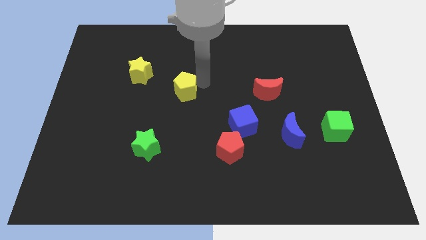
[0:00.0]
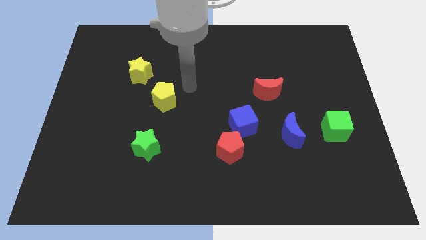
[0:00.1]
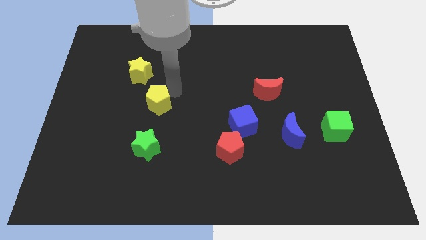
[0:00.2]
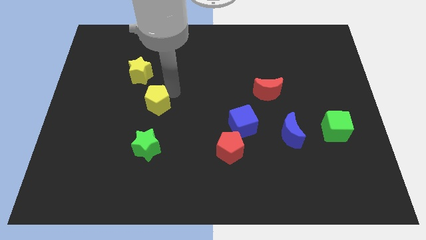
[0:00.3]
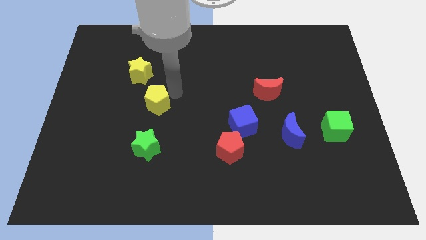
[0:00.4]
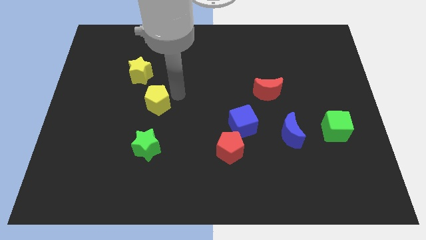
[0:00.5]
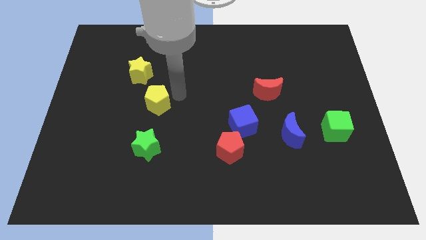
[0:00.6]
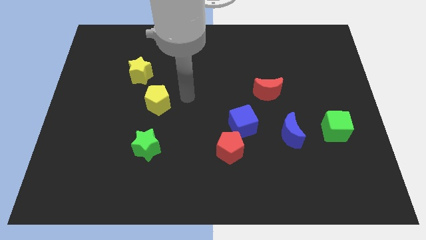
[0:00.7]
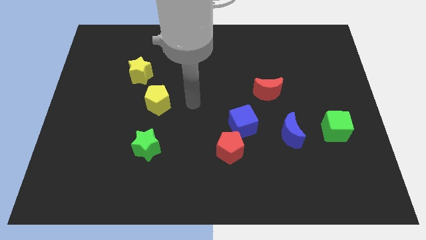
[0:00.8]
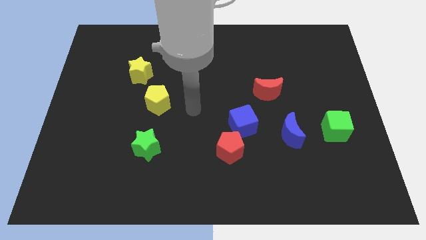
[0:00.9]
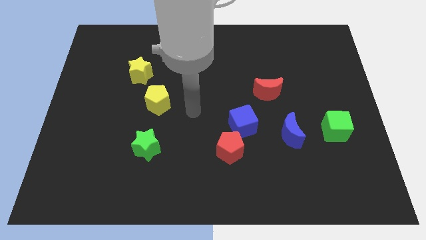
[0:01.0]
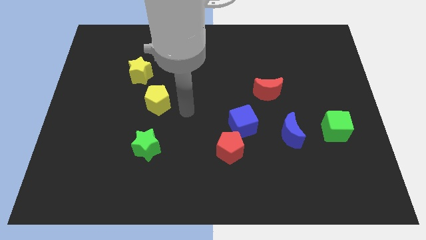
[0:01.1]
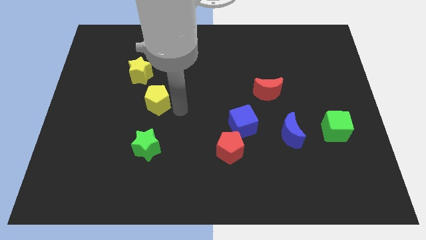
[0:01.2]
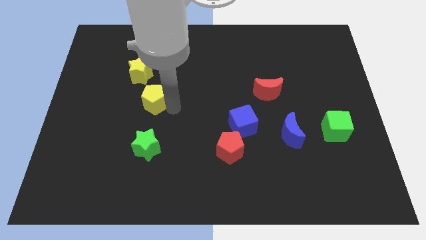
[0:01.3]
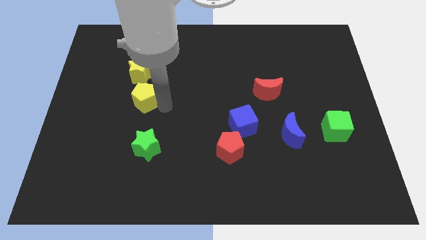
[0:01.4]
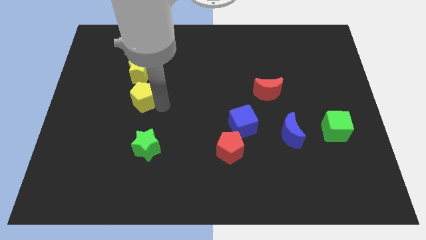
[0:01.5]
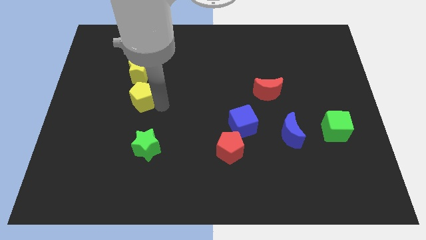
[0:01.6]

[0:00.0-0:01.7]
place the yellow pentagon below the yellow star

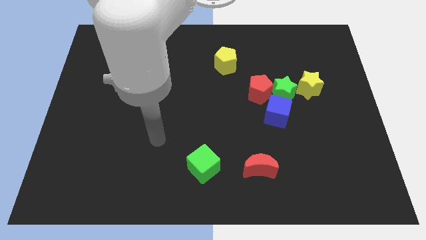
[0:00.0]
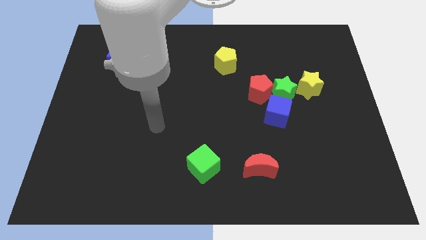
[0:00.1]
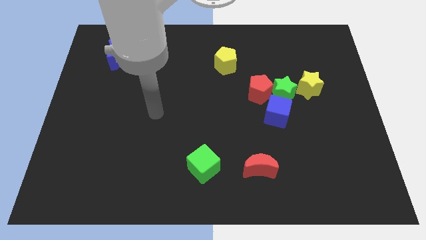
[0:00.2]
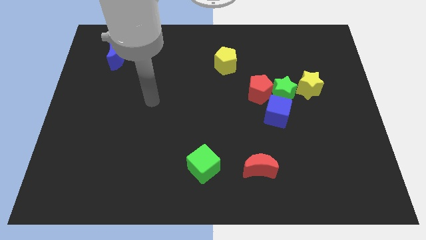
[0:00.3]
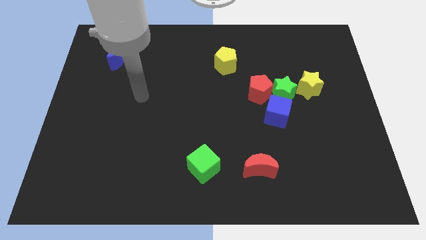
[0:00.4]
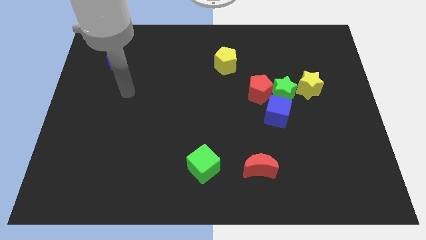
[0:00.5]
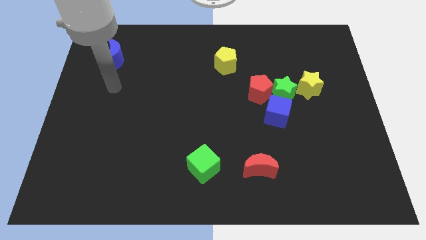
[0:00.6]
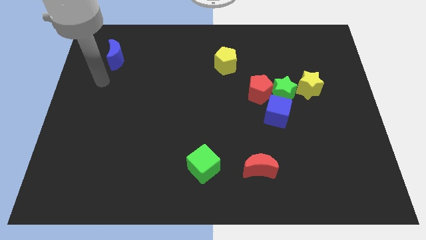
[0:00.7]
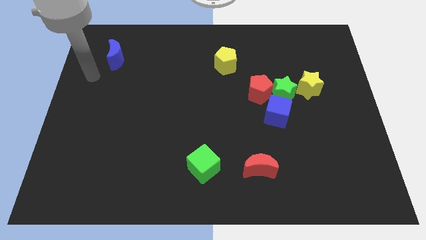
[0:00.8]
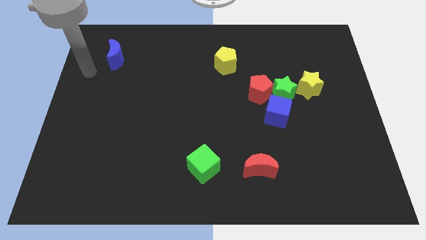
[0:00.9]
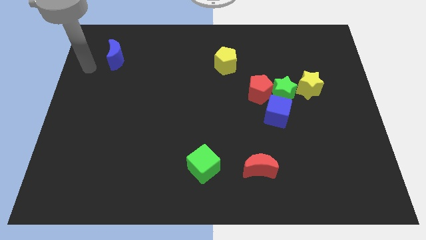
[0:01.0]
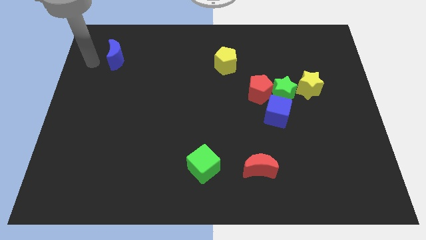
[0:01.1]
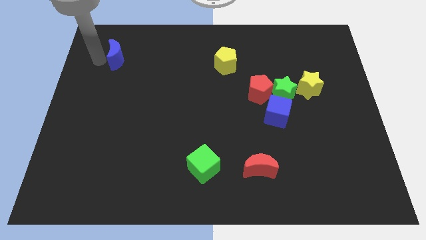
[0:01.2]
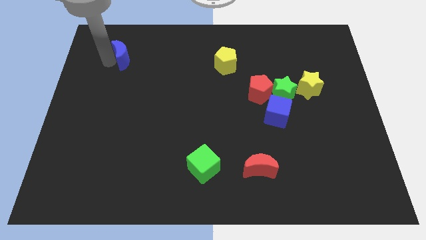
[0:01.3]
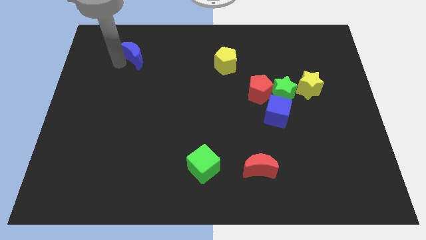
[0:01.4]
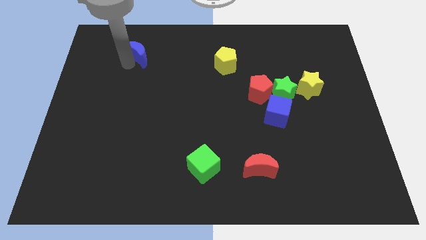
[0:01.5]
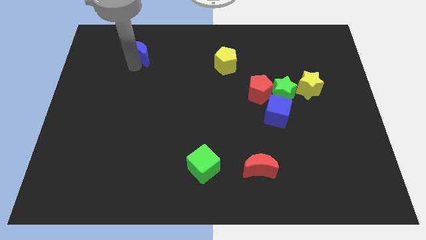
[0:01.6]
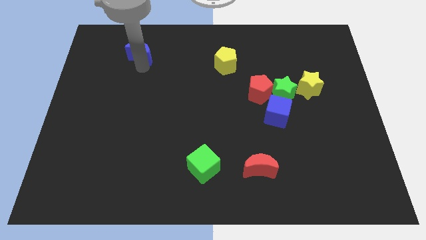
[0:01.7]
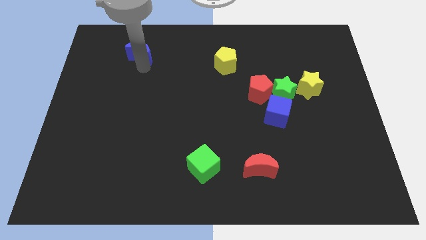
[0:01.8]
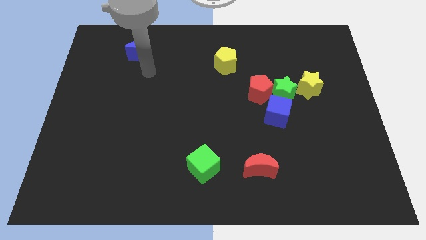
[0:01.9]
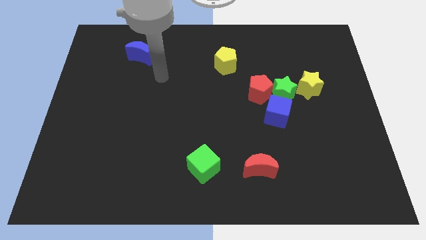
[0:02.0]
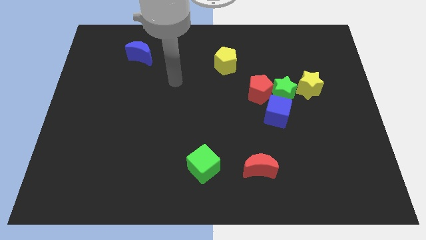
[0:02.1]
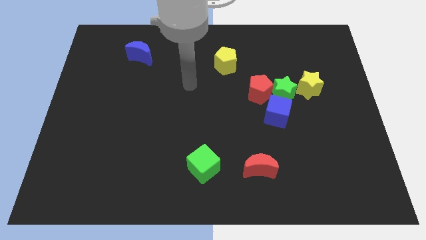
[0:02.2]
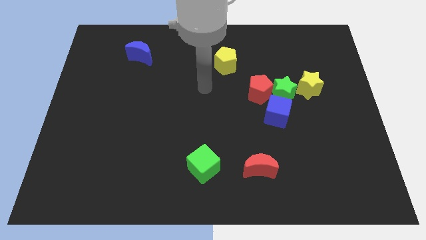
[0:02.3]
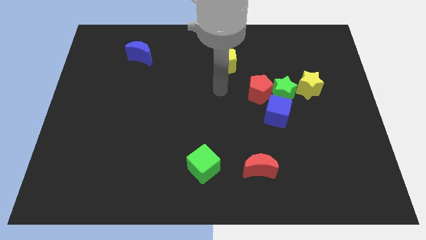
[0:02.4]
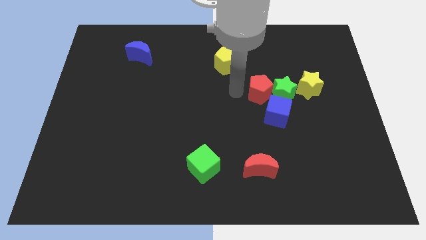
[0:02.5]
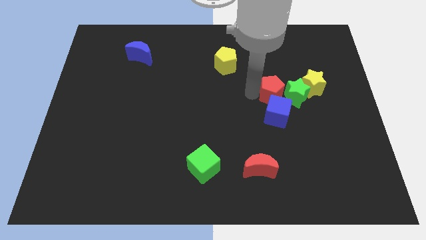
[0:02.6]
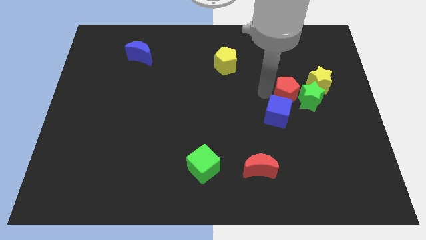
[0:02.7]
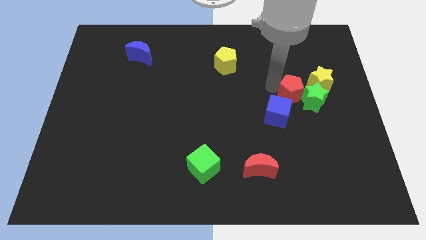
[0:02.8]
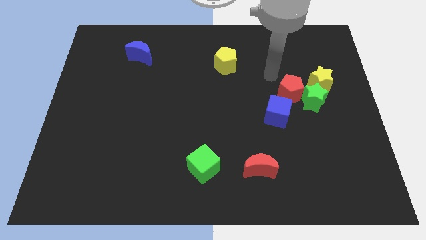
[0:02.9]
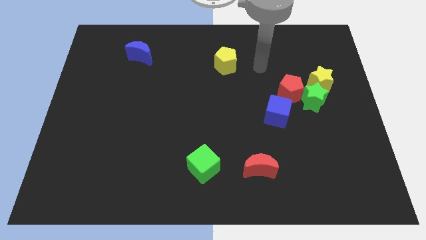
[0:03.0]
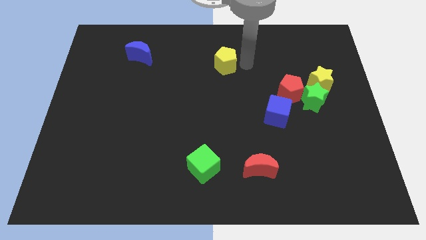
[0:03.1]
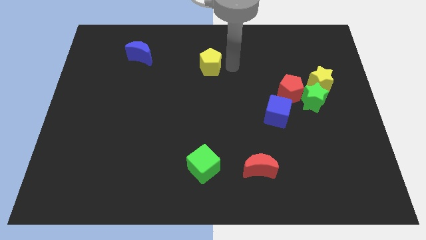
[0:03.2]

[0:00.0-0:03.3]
touch the blue crescent and red pentagon

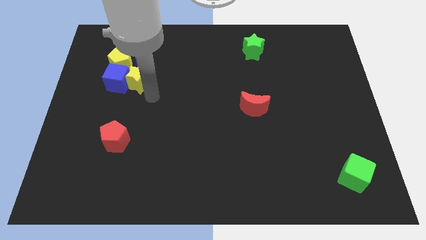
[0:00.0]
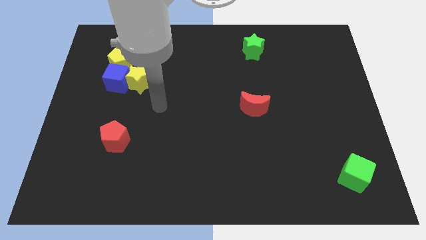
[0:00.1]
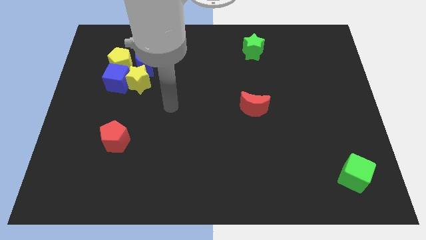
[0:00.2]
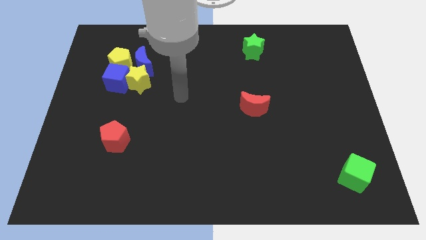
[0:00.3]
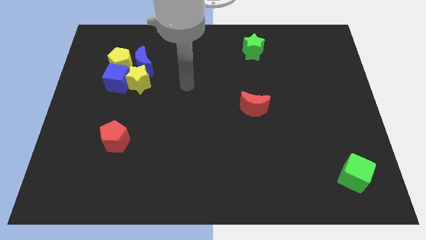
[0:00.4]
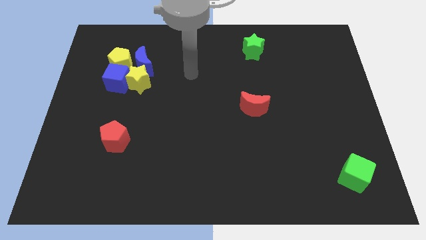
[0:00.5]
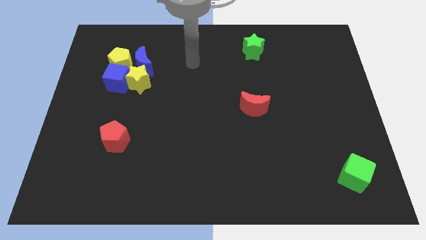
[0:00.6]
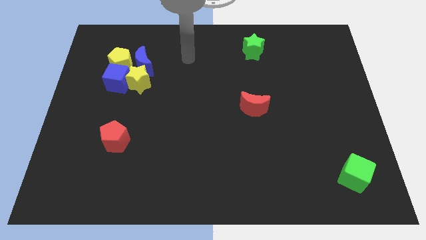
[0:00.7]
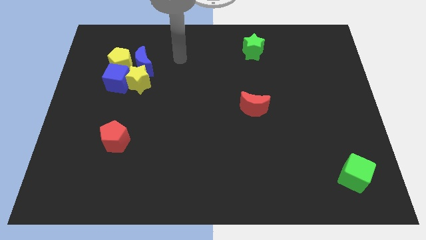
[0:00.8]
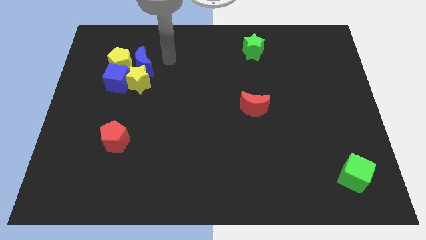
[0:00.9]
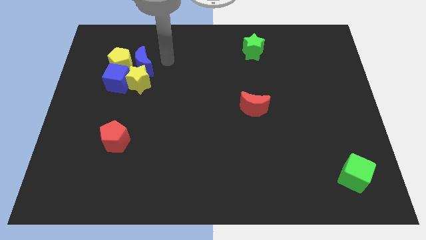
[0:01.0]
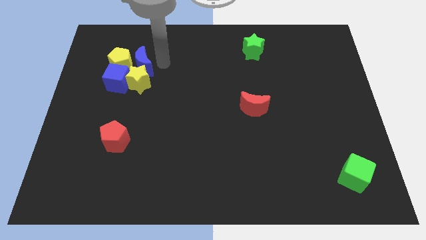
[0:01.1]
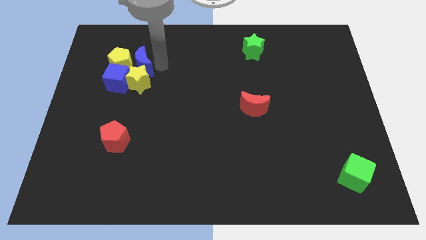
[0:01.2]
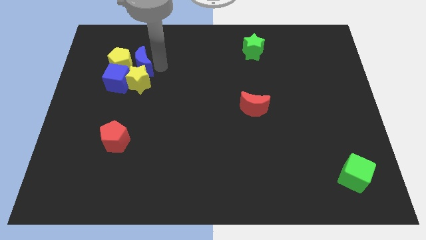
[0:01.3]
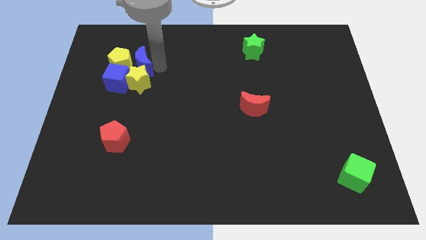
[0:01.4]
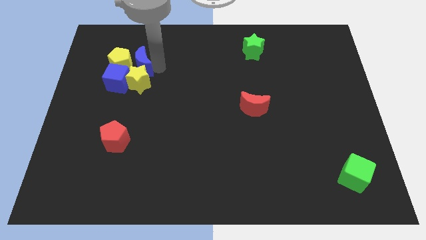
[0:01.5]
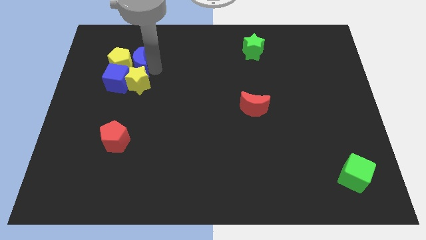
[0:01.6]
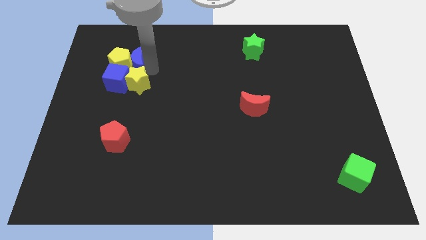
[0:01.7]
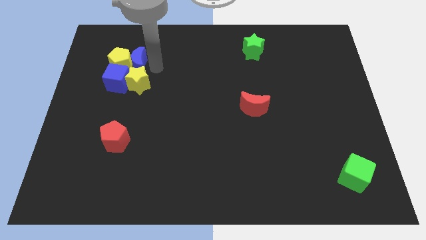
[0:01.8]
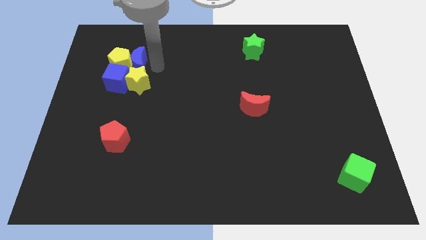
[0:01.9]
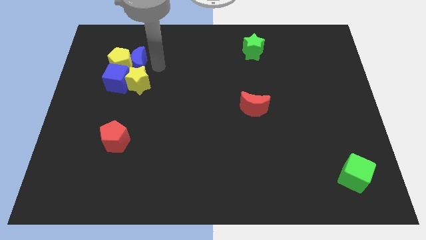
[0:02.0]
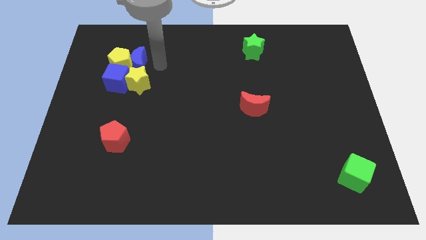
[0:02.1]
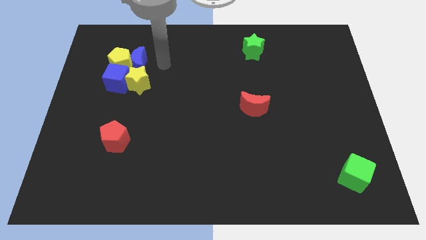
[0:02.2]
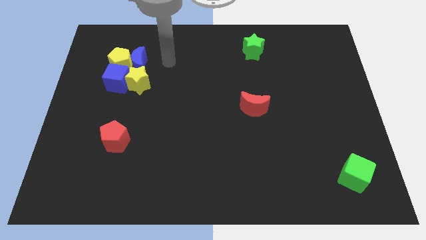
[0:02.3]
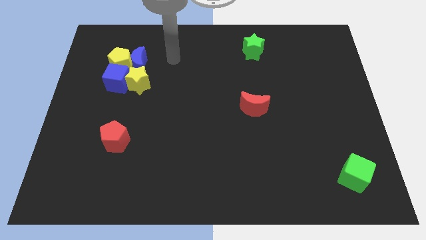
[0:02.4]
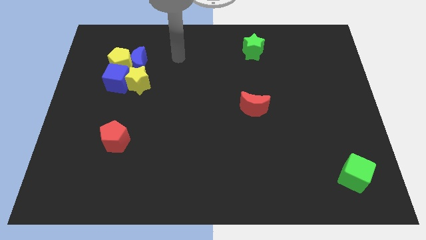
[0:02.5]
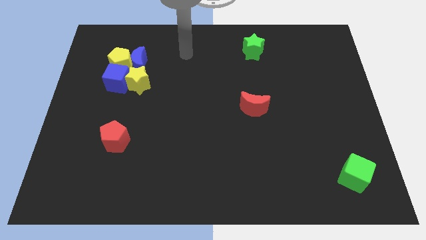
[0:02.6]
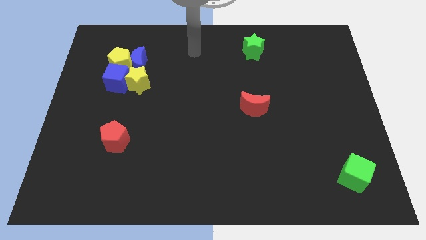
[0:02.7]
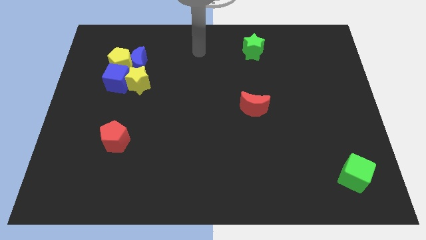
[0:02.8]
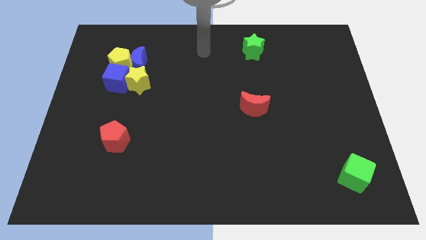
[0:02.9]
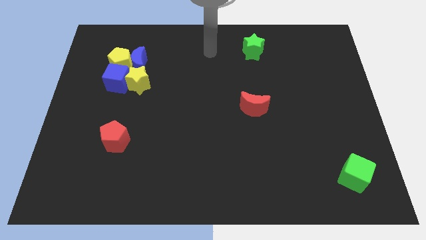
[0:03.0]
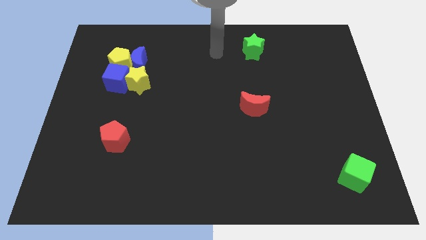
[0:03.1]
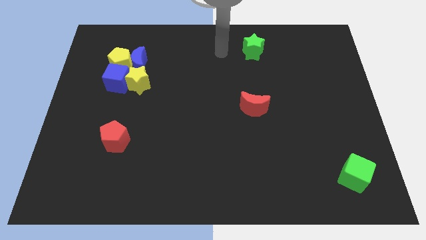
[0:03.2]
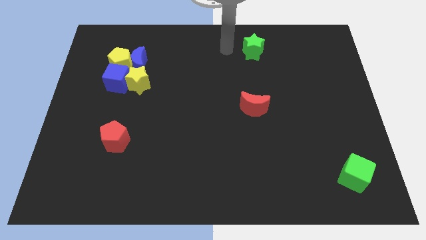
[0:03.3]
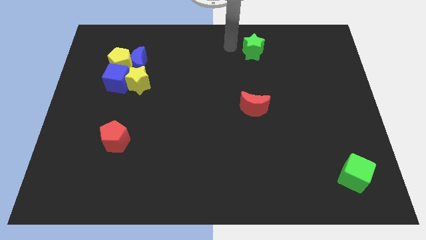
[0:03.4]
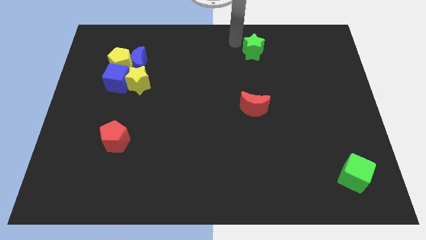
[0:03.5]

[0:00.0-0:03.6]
move blue crescent into yellow pentagon

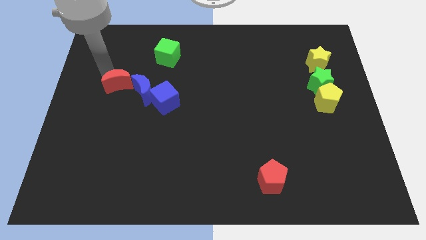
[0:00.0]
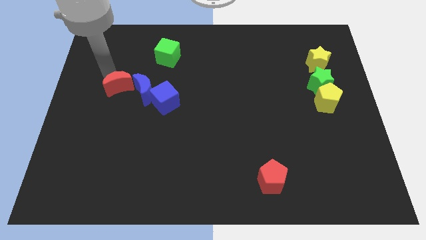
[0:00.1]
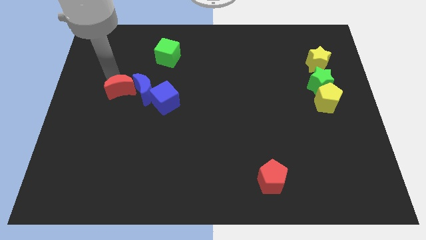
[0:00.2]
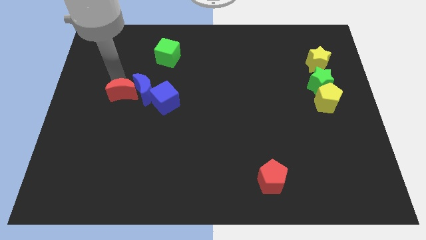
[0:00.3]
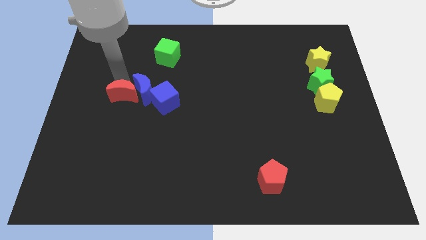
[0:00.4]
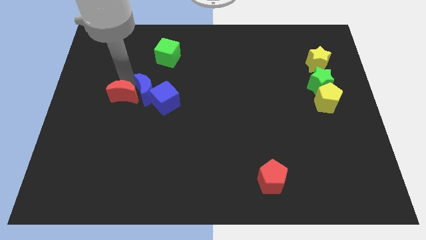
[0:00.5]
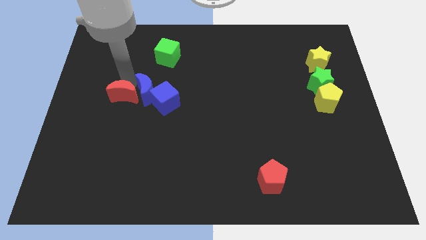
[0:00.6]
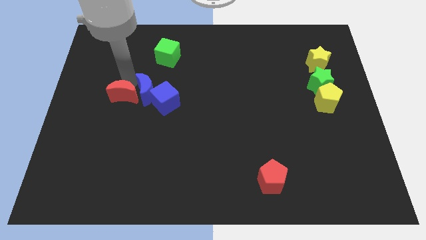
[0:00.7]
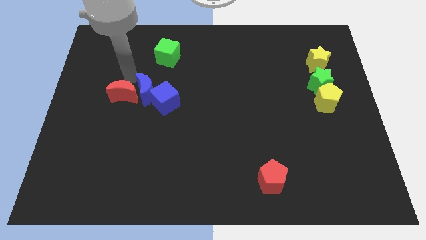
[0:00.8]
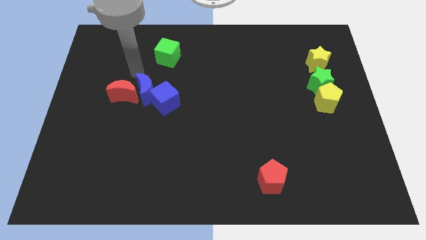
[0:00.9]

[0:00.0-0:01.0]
move the red moon slightly bottom side
